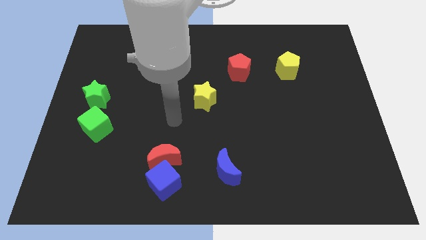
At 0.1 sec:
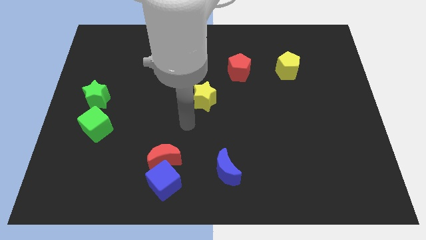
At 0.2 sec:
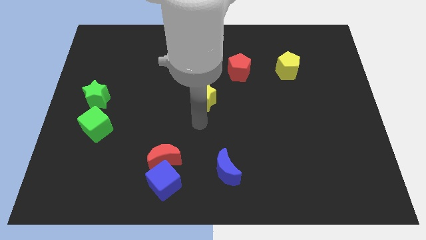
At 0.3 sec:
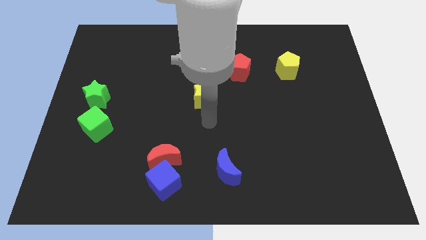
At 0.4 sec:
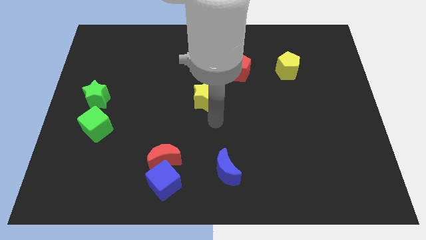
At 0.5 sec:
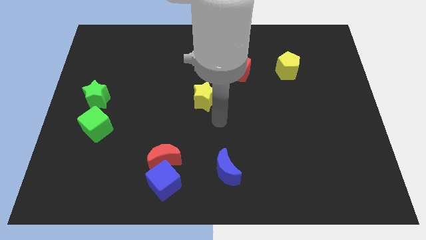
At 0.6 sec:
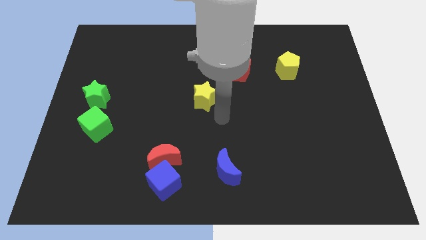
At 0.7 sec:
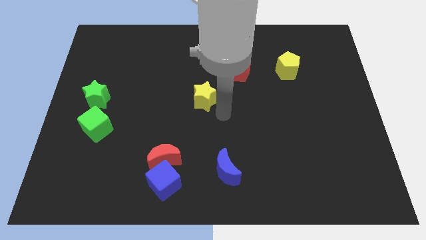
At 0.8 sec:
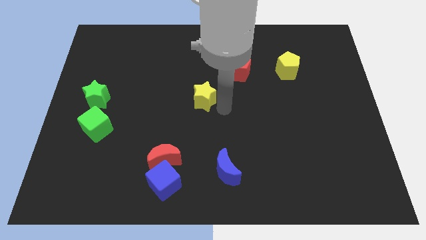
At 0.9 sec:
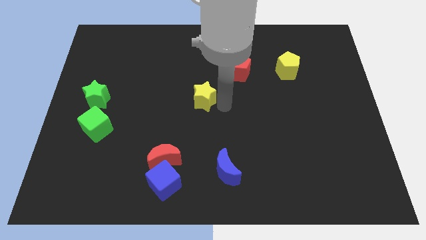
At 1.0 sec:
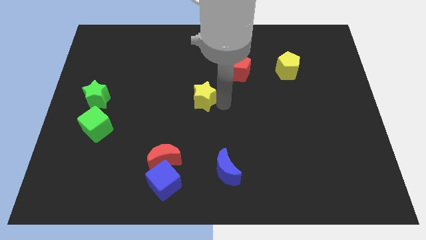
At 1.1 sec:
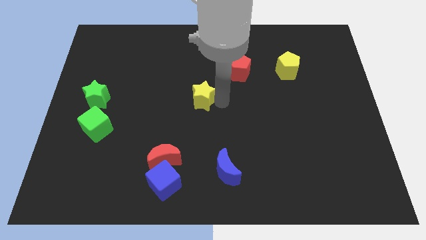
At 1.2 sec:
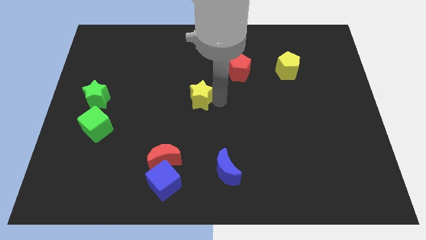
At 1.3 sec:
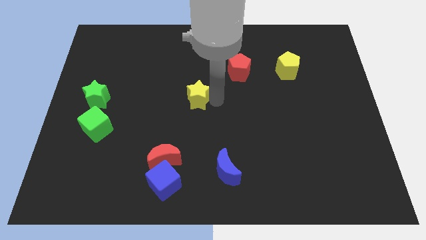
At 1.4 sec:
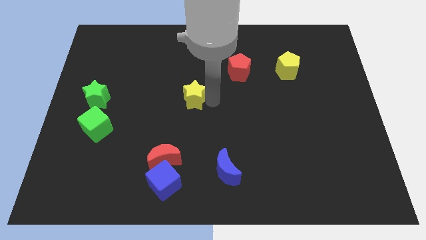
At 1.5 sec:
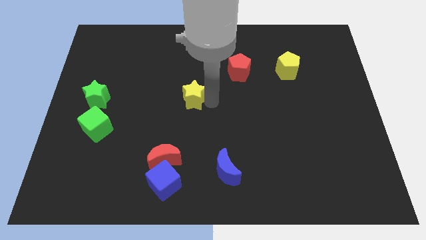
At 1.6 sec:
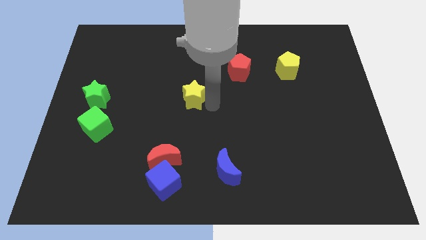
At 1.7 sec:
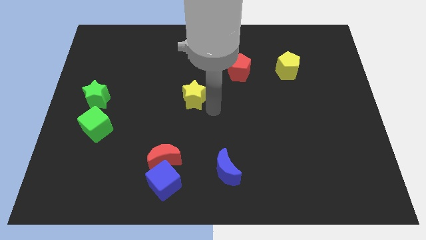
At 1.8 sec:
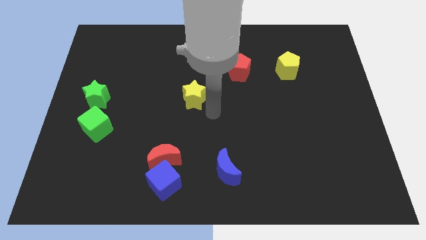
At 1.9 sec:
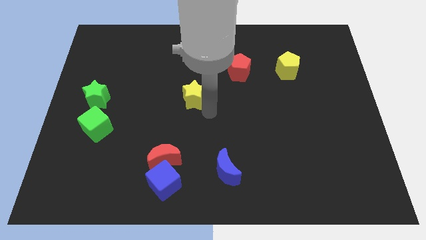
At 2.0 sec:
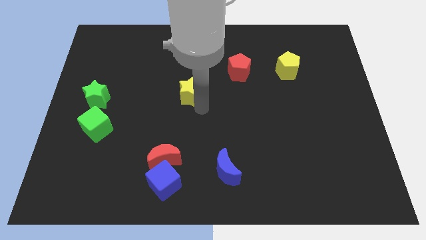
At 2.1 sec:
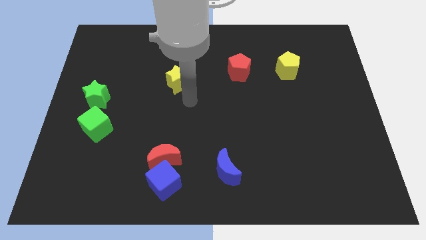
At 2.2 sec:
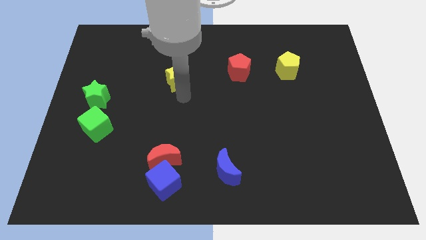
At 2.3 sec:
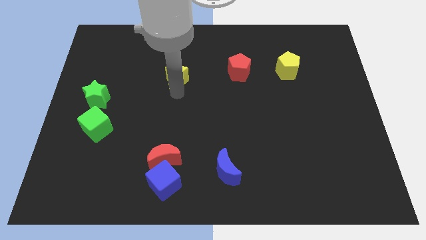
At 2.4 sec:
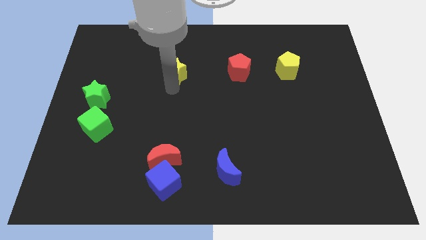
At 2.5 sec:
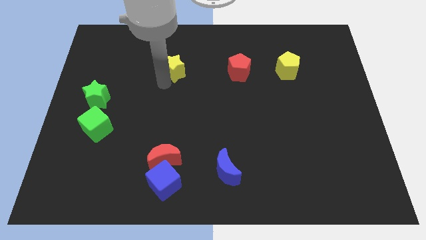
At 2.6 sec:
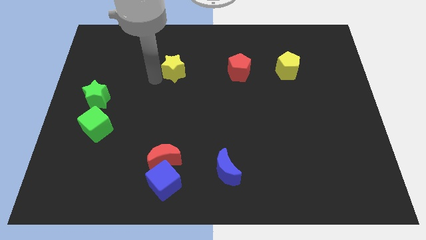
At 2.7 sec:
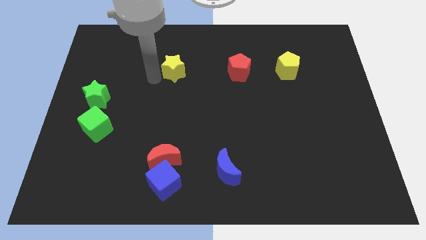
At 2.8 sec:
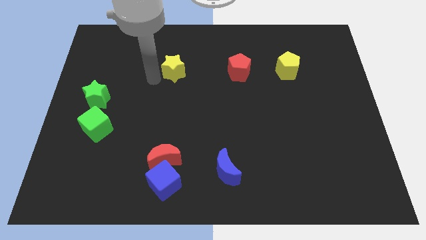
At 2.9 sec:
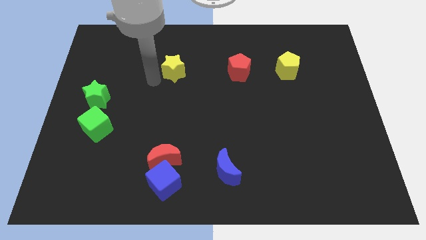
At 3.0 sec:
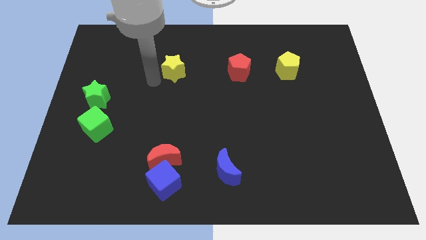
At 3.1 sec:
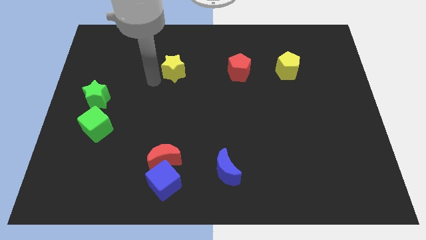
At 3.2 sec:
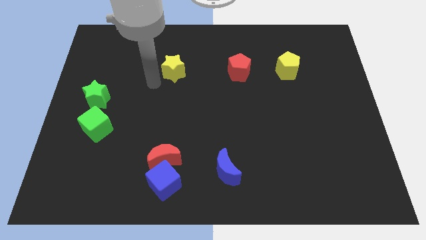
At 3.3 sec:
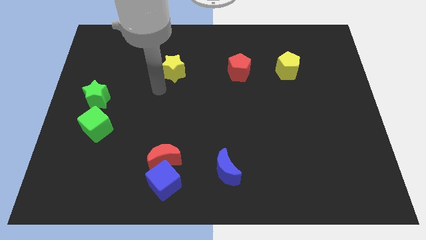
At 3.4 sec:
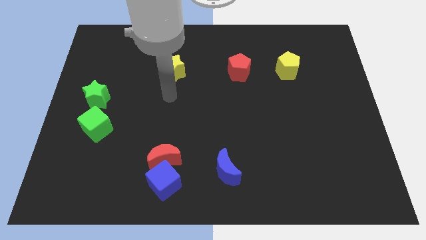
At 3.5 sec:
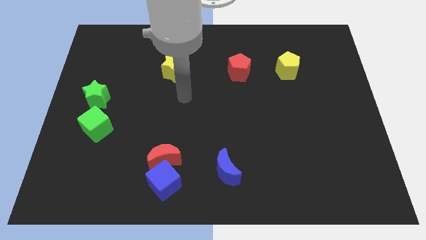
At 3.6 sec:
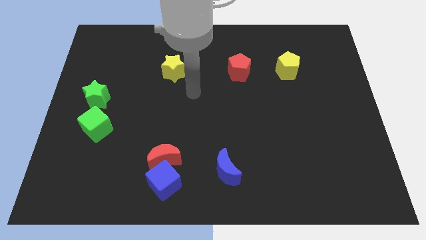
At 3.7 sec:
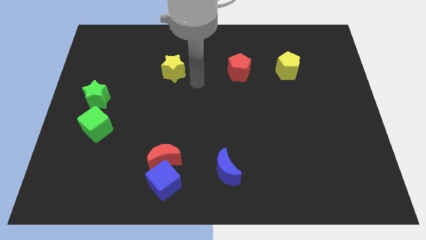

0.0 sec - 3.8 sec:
place the yellow star left to the red pentagon

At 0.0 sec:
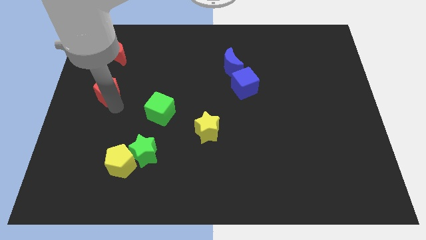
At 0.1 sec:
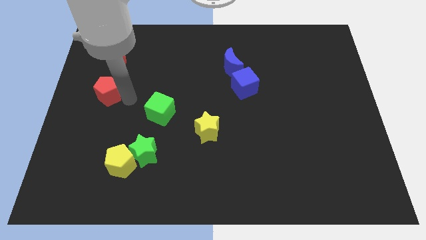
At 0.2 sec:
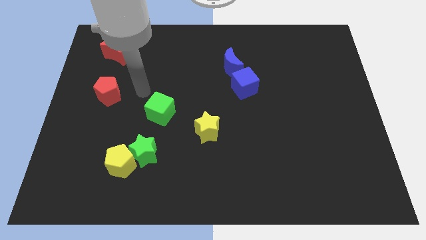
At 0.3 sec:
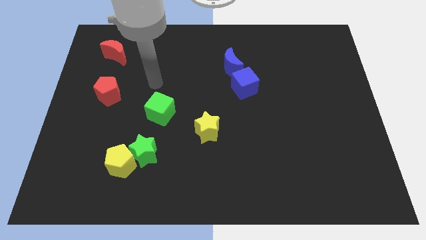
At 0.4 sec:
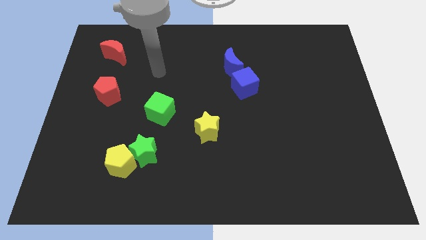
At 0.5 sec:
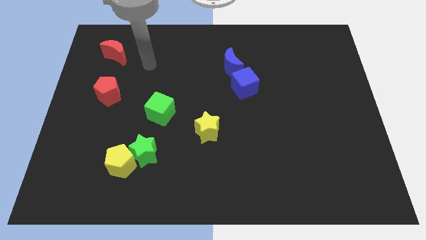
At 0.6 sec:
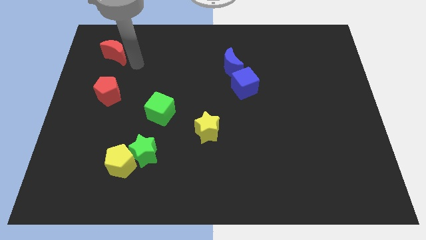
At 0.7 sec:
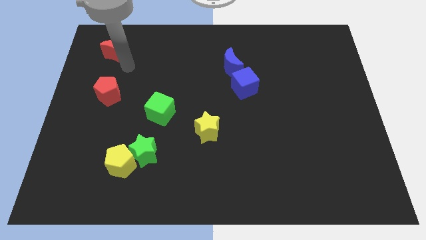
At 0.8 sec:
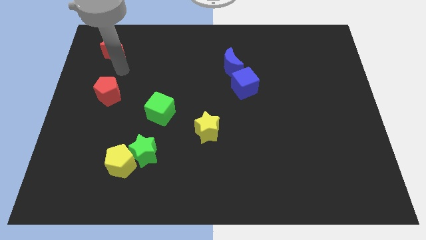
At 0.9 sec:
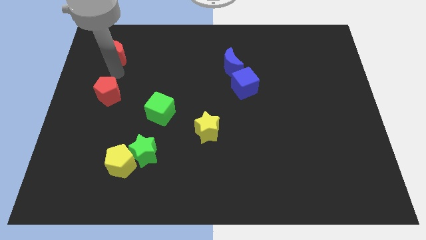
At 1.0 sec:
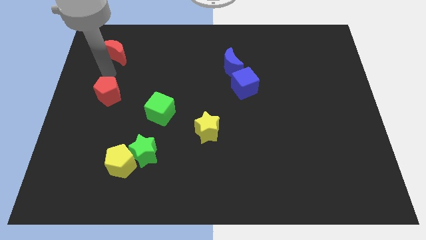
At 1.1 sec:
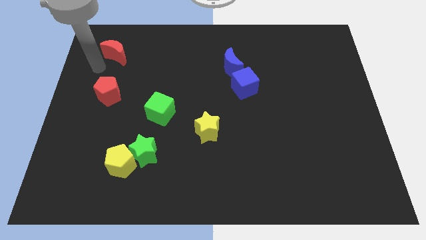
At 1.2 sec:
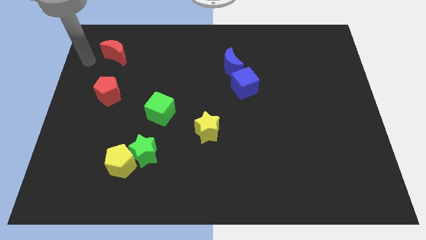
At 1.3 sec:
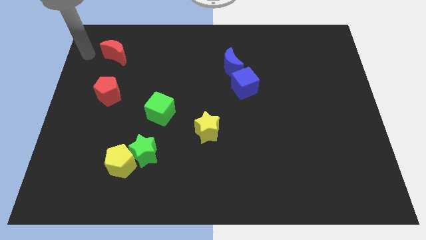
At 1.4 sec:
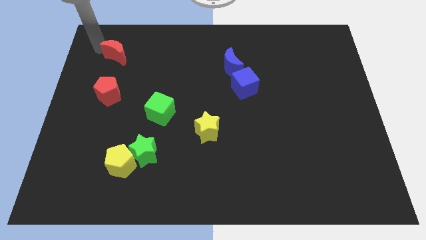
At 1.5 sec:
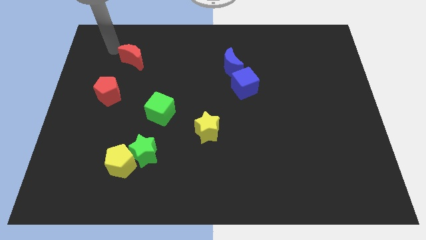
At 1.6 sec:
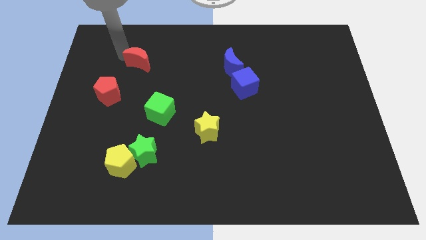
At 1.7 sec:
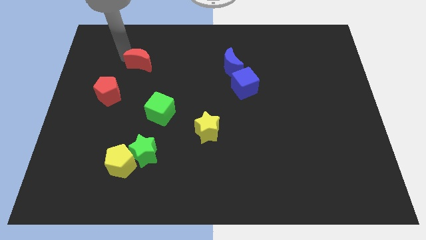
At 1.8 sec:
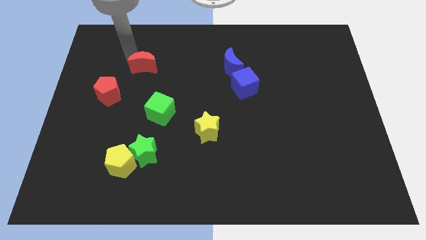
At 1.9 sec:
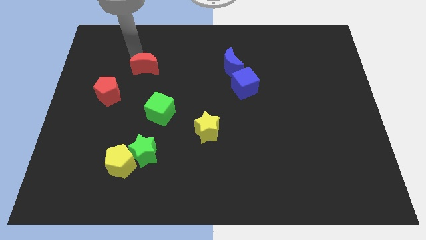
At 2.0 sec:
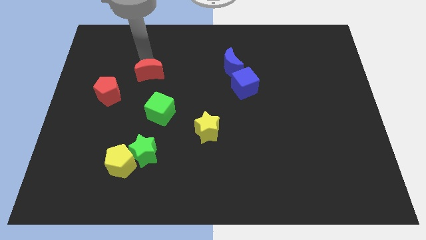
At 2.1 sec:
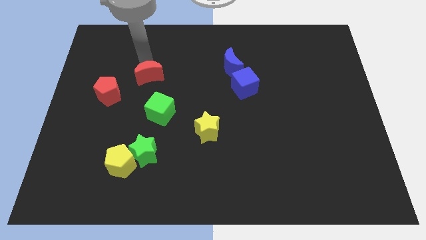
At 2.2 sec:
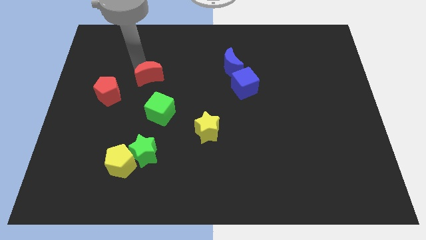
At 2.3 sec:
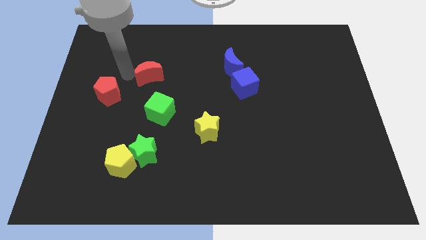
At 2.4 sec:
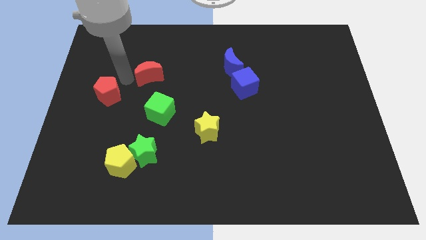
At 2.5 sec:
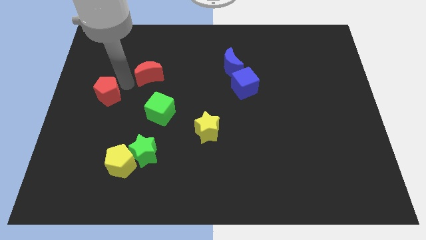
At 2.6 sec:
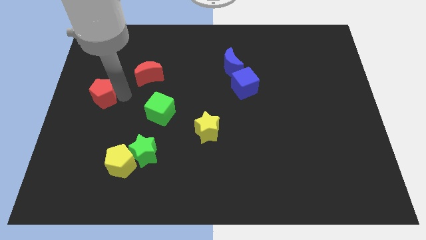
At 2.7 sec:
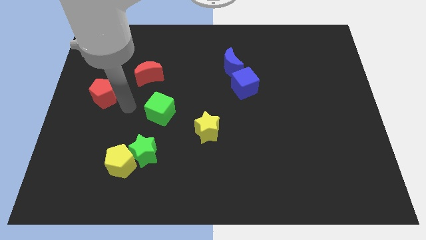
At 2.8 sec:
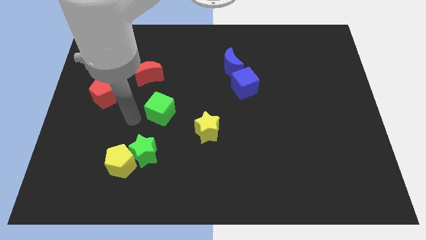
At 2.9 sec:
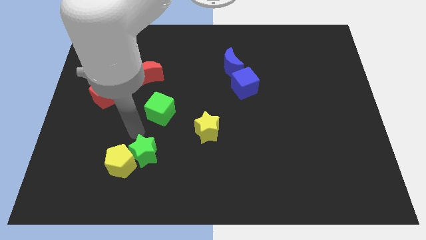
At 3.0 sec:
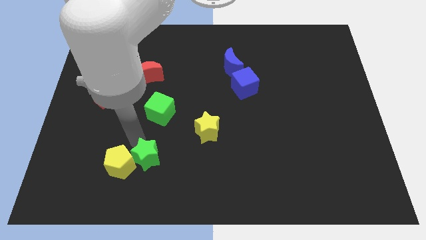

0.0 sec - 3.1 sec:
move the red crescent towards the green cube

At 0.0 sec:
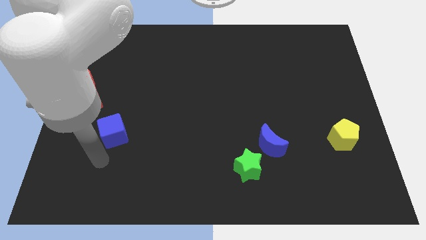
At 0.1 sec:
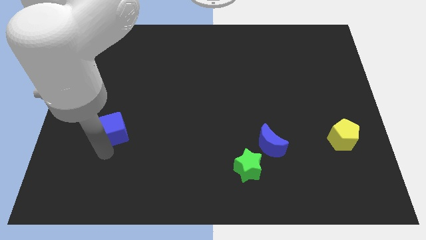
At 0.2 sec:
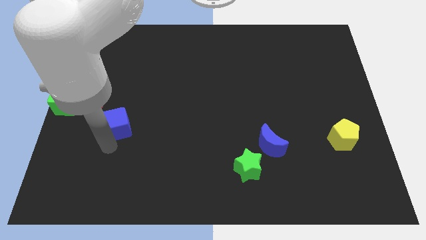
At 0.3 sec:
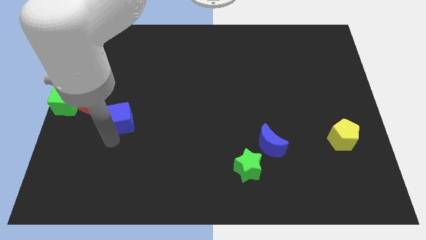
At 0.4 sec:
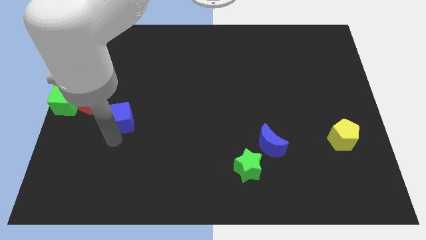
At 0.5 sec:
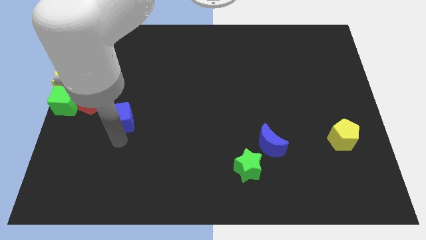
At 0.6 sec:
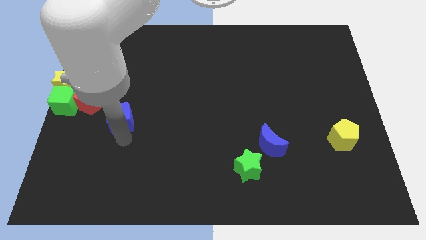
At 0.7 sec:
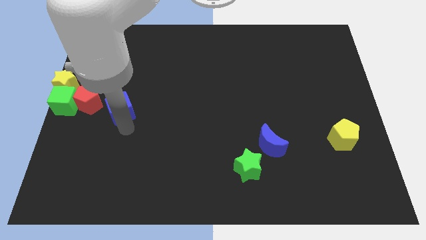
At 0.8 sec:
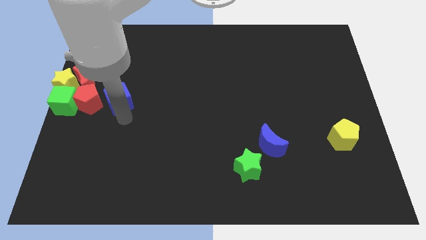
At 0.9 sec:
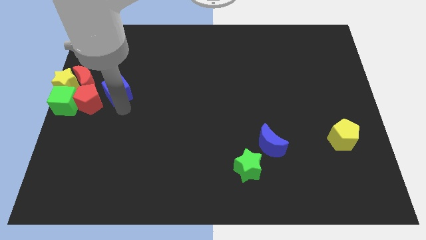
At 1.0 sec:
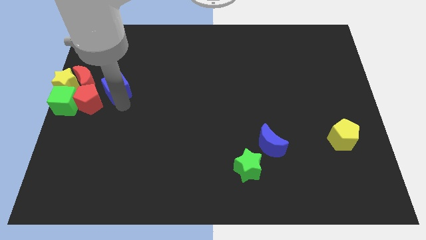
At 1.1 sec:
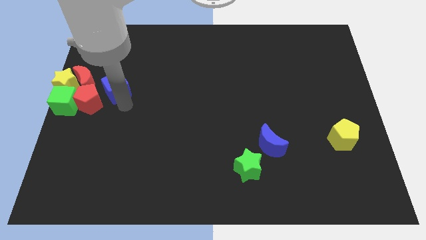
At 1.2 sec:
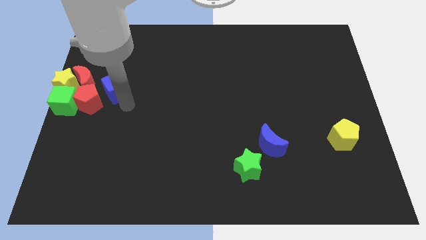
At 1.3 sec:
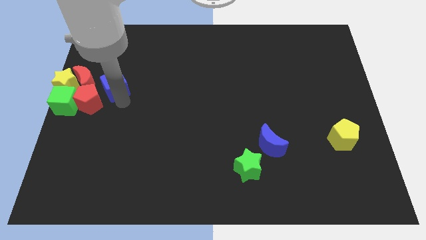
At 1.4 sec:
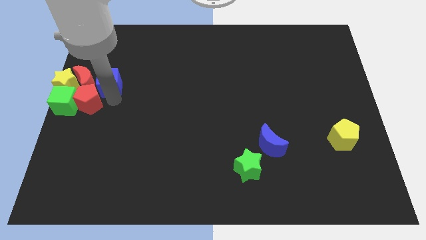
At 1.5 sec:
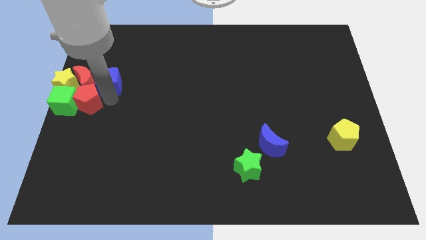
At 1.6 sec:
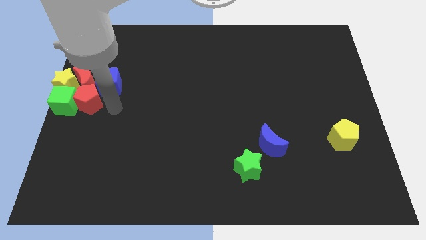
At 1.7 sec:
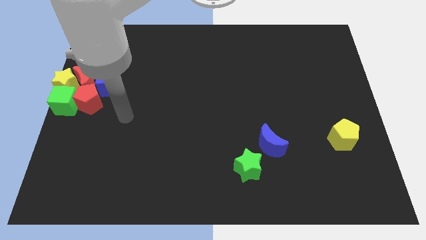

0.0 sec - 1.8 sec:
place the blue cube right to the red pentagon

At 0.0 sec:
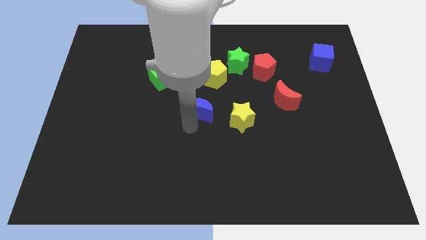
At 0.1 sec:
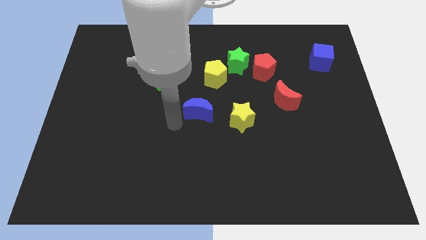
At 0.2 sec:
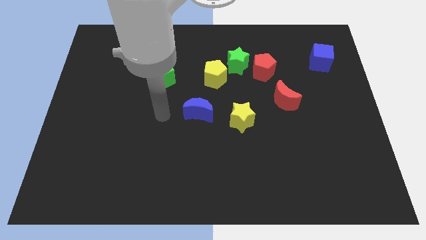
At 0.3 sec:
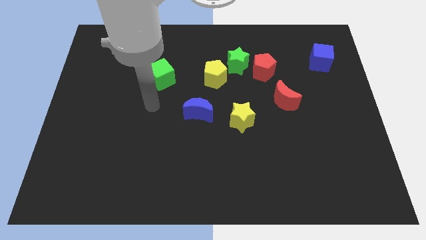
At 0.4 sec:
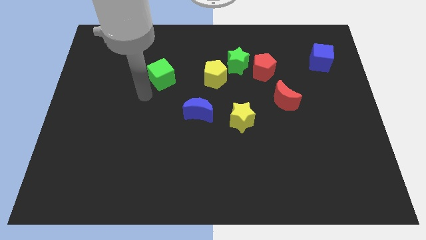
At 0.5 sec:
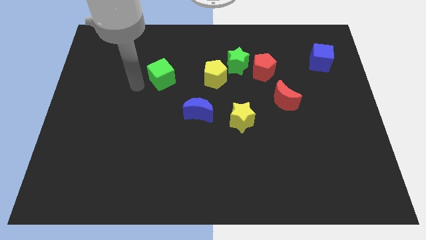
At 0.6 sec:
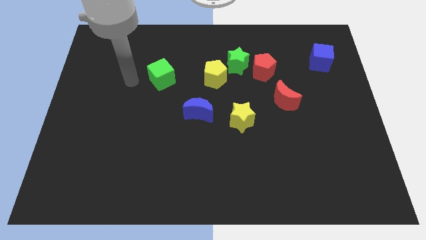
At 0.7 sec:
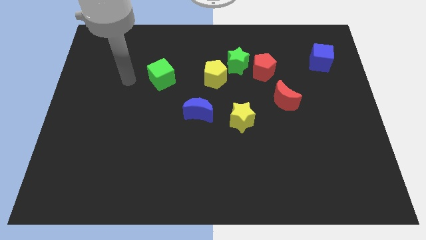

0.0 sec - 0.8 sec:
move away from the blue moon
